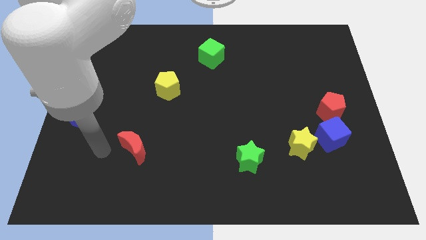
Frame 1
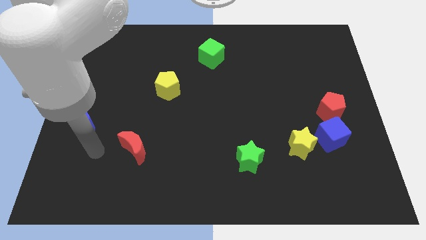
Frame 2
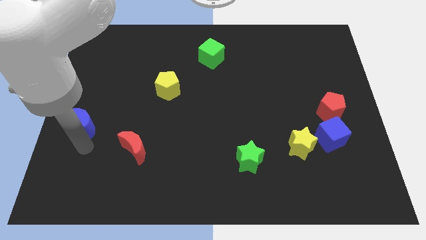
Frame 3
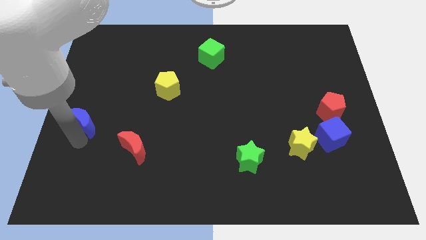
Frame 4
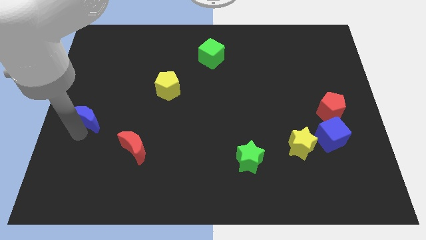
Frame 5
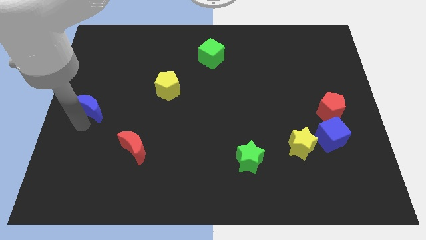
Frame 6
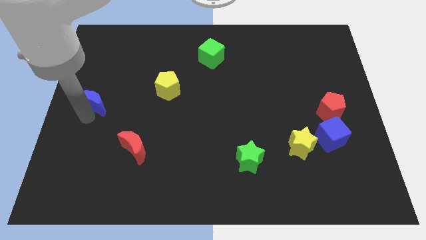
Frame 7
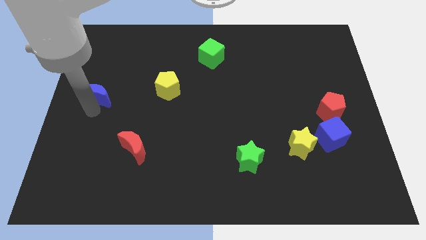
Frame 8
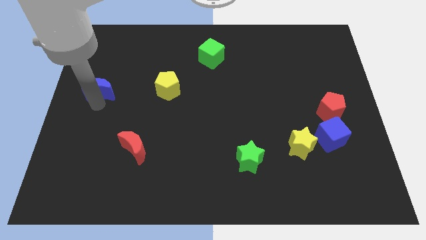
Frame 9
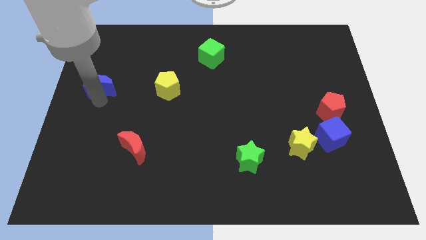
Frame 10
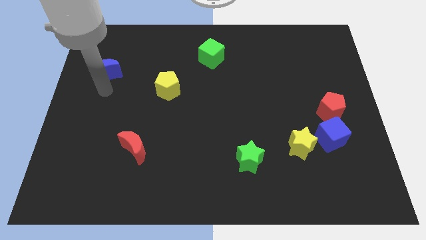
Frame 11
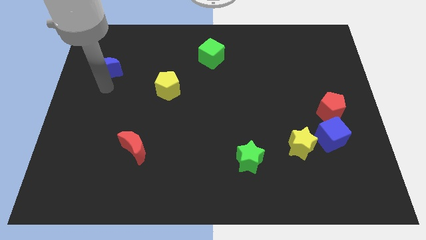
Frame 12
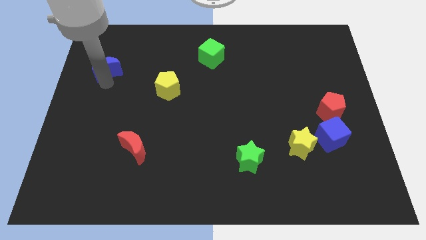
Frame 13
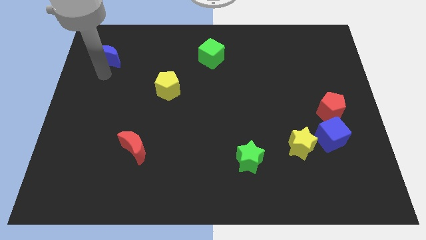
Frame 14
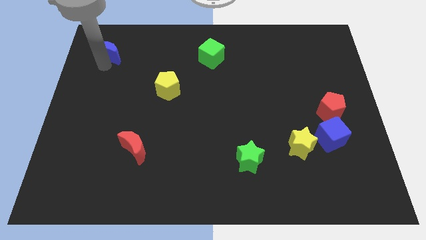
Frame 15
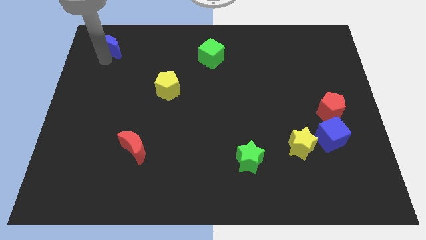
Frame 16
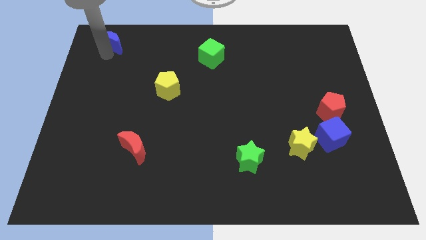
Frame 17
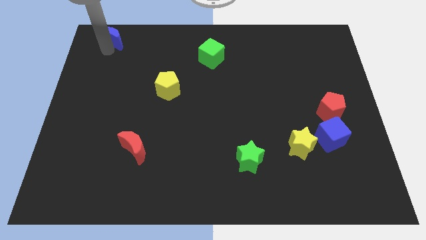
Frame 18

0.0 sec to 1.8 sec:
drag the blue crescent to the top left side of the table

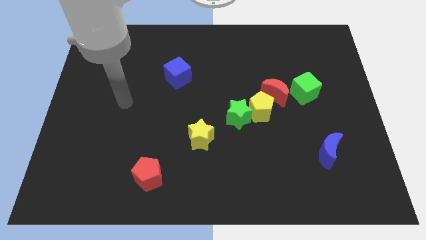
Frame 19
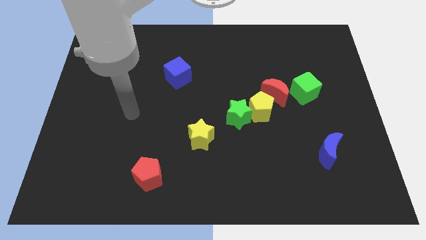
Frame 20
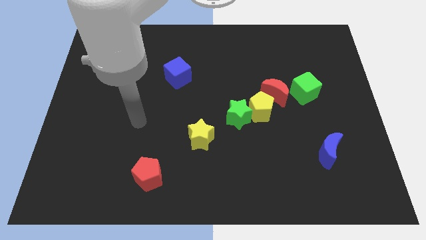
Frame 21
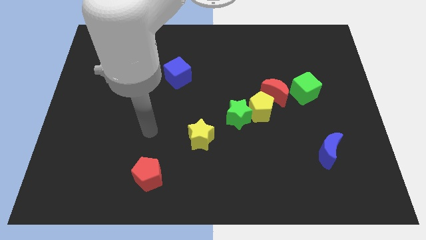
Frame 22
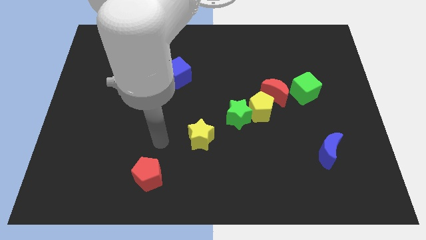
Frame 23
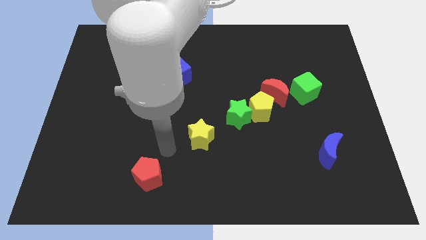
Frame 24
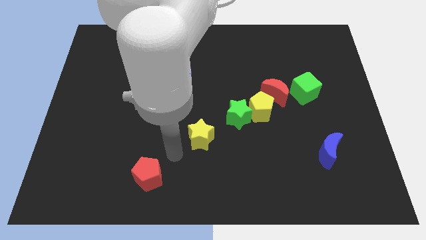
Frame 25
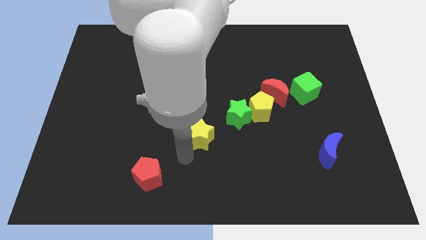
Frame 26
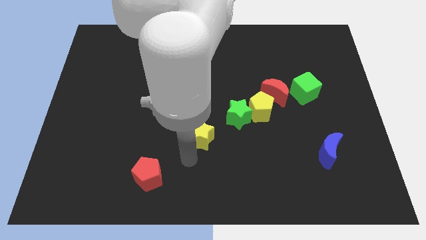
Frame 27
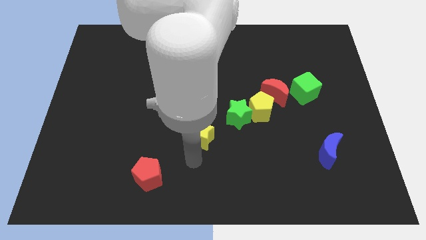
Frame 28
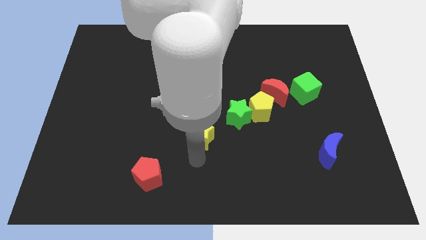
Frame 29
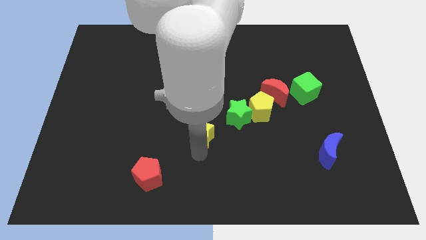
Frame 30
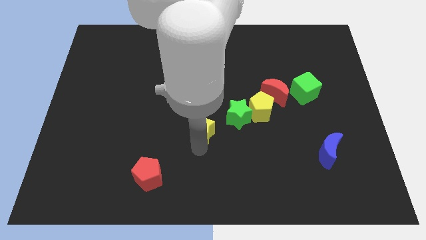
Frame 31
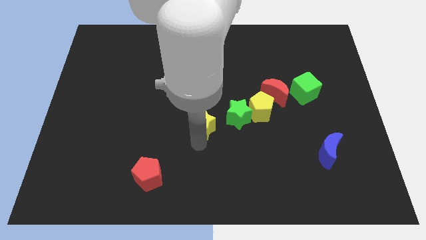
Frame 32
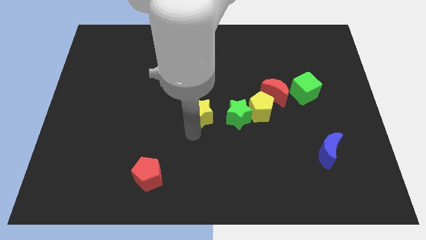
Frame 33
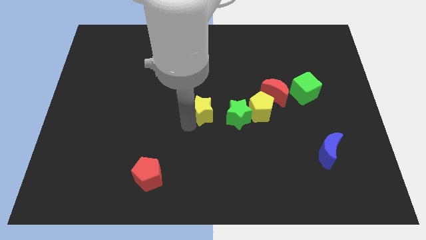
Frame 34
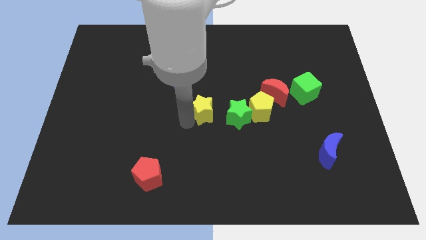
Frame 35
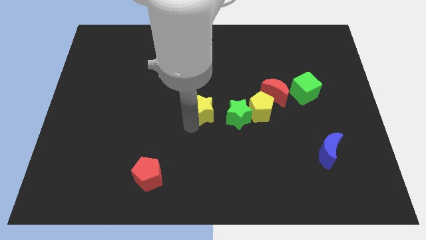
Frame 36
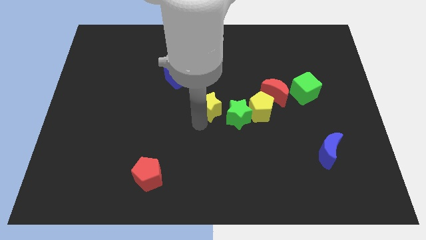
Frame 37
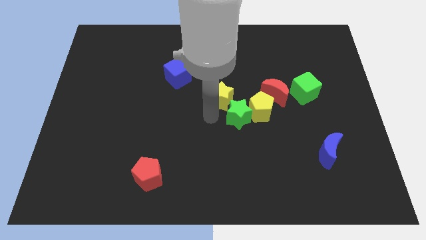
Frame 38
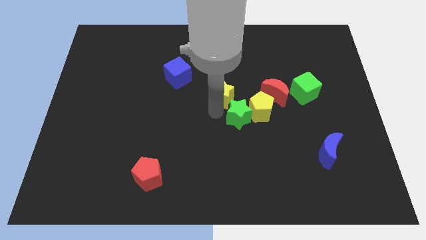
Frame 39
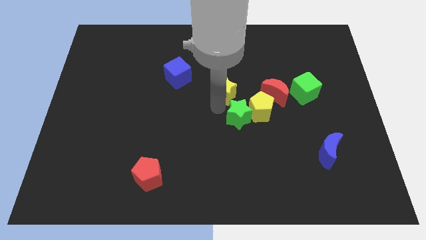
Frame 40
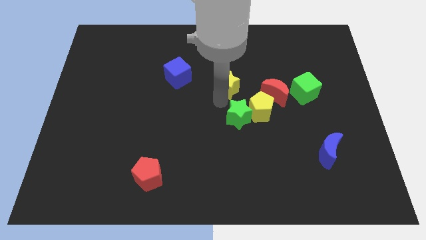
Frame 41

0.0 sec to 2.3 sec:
move yellow star above green star

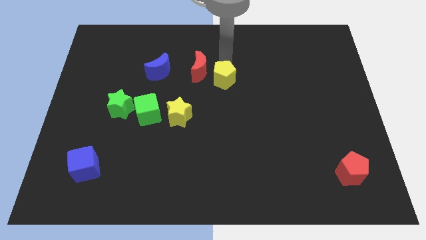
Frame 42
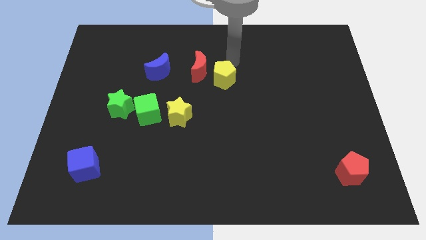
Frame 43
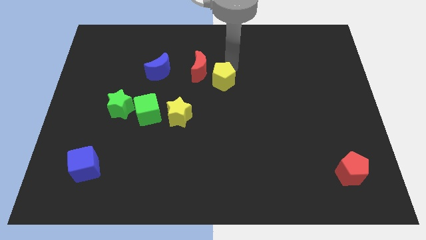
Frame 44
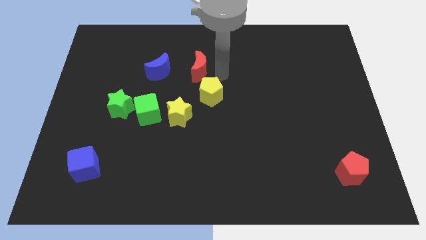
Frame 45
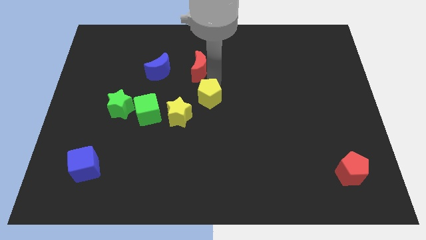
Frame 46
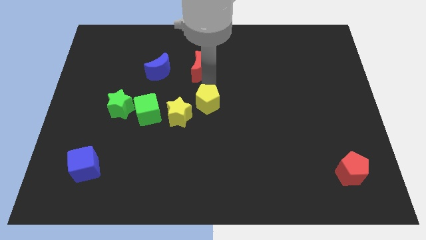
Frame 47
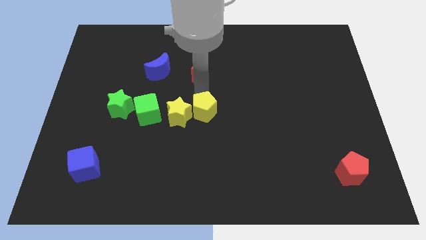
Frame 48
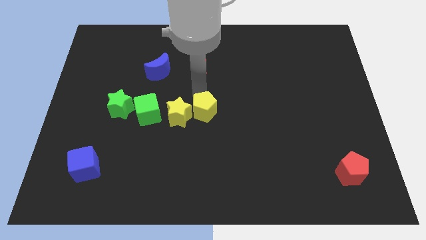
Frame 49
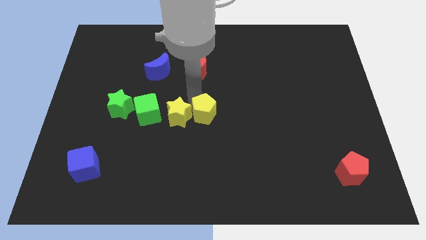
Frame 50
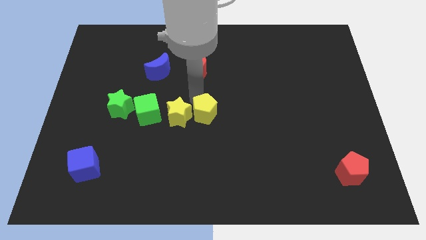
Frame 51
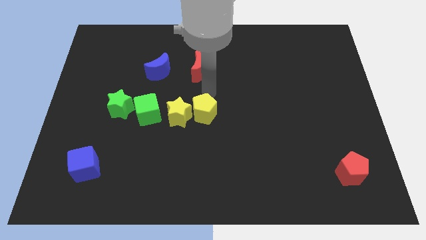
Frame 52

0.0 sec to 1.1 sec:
push the yellow pentagon right to the yellow star

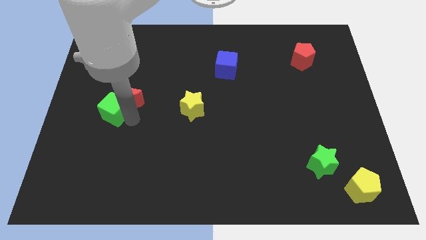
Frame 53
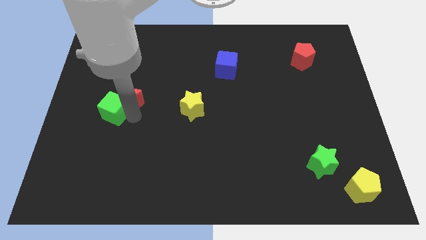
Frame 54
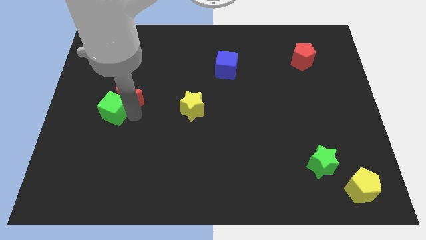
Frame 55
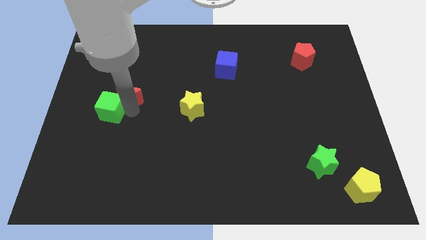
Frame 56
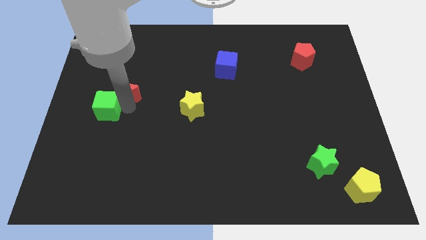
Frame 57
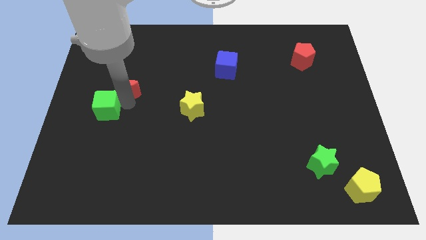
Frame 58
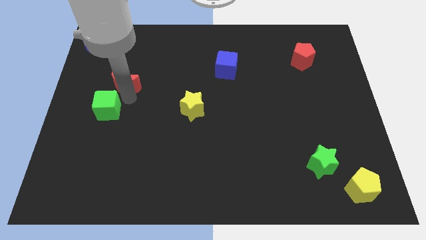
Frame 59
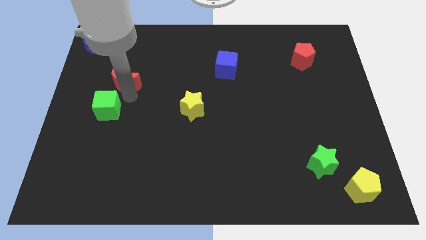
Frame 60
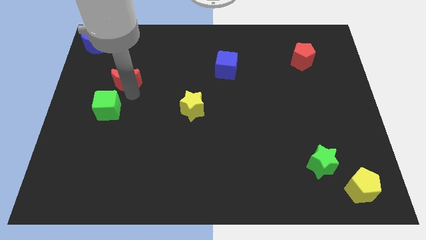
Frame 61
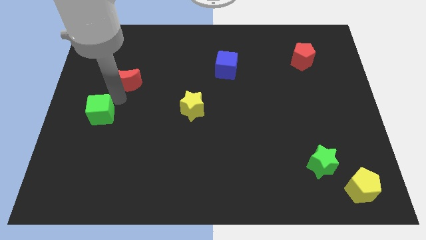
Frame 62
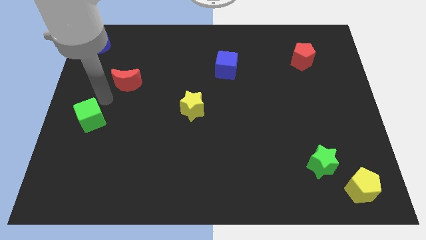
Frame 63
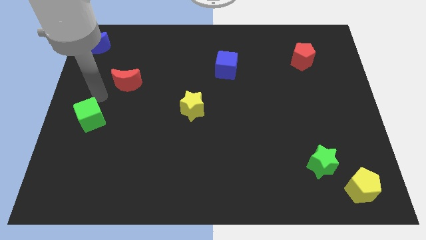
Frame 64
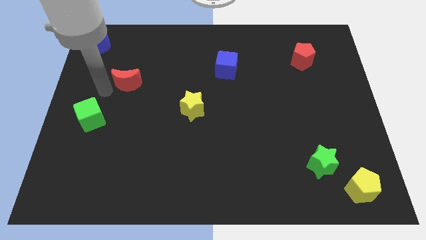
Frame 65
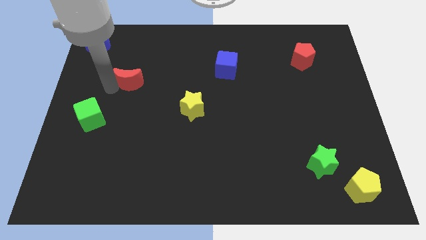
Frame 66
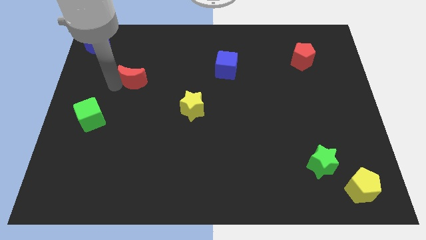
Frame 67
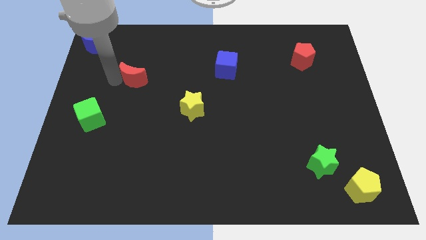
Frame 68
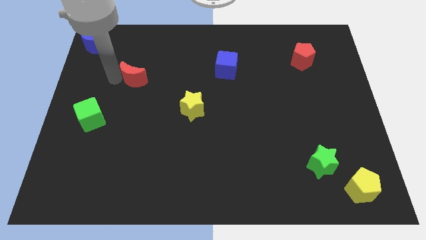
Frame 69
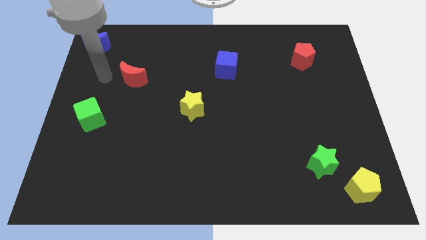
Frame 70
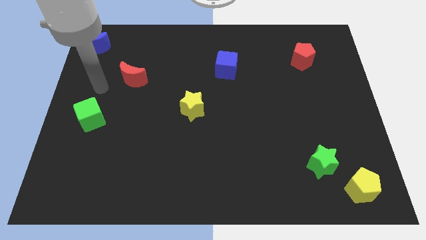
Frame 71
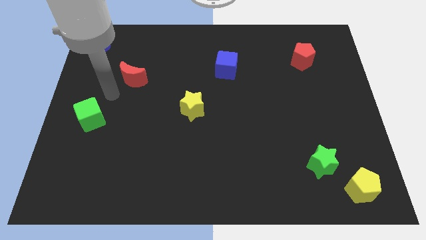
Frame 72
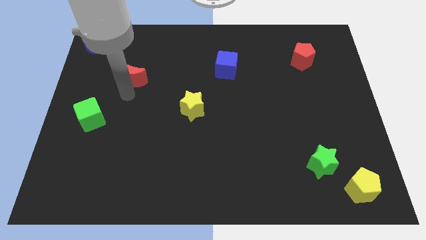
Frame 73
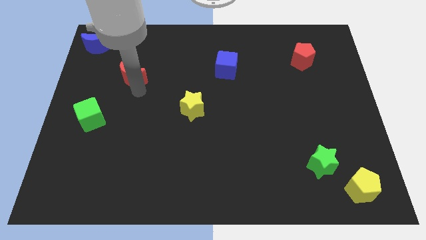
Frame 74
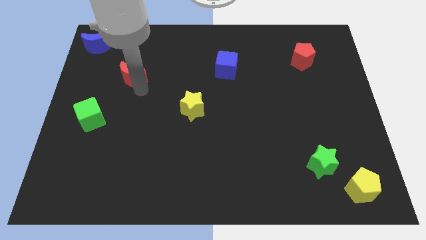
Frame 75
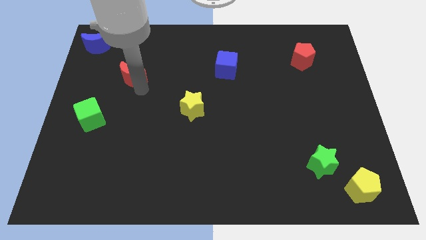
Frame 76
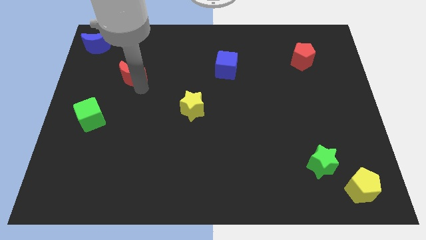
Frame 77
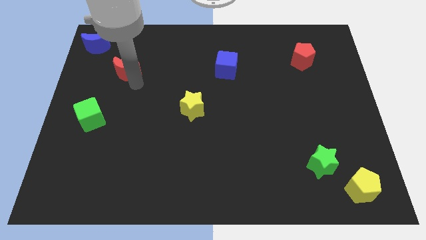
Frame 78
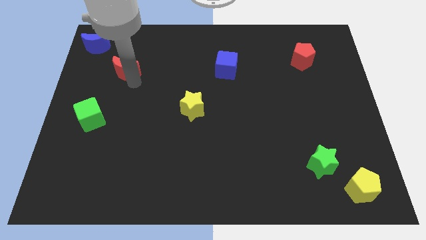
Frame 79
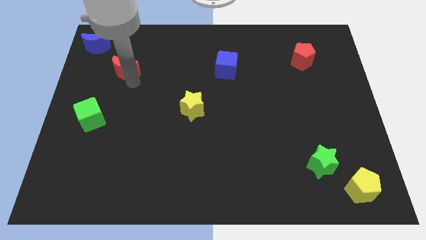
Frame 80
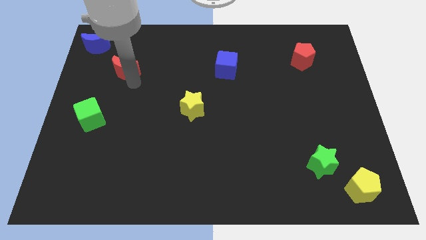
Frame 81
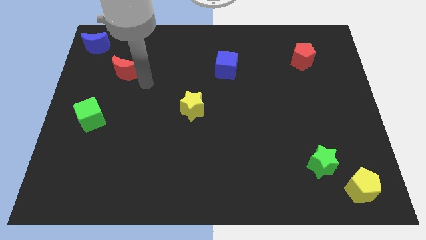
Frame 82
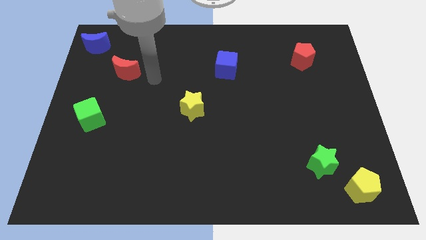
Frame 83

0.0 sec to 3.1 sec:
push red moon towards blue moon

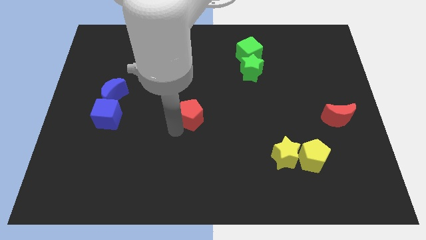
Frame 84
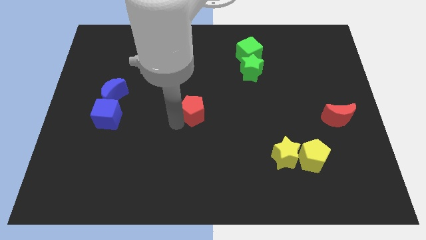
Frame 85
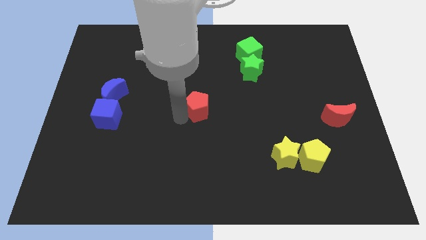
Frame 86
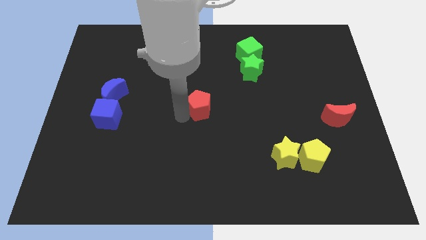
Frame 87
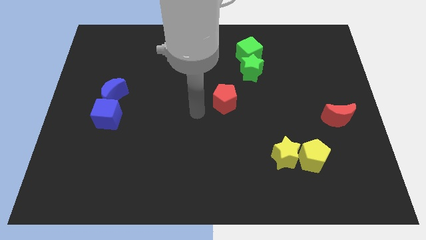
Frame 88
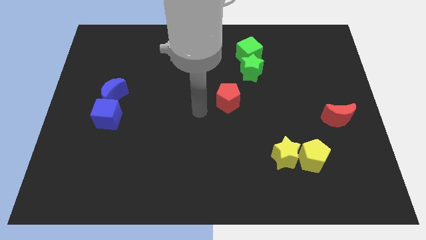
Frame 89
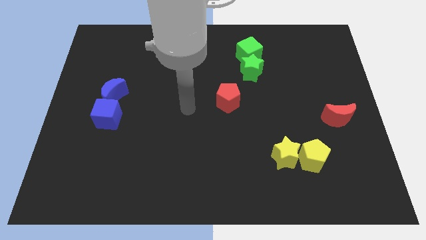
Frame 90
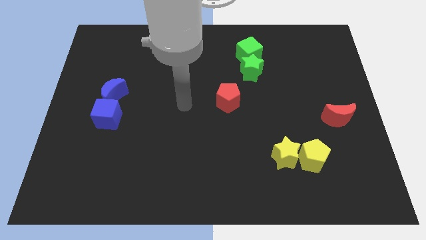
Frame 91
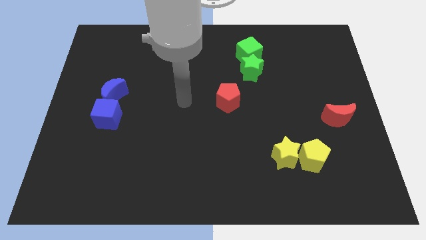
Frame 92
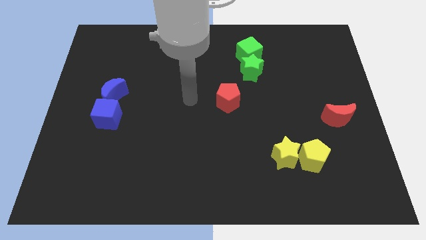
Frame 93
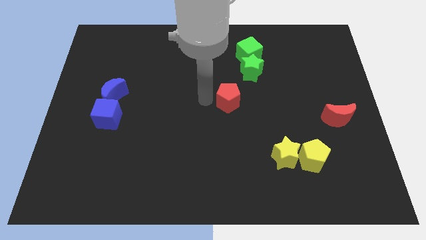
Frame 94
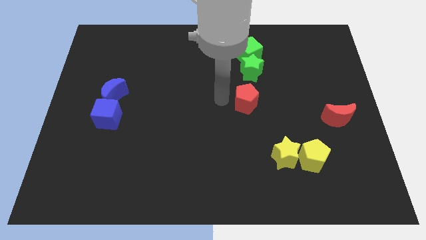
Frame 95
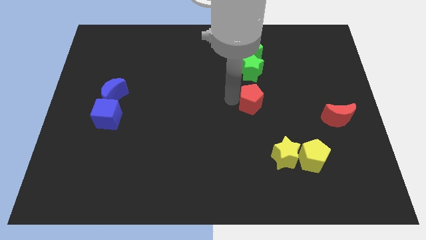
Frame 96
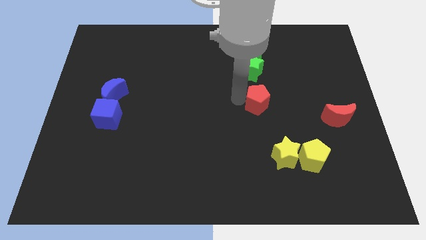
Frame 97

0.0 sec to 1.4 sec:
move the red pentagon to the bottom side of the green star
